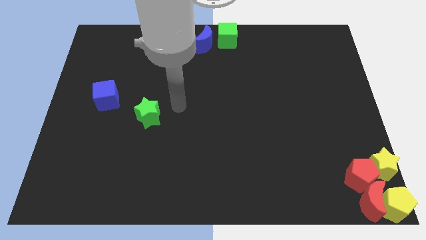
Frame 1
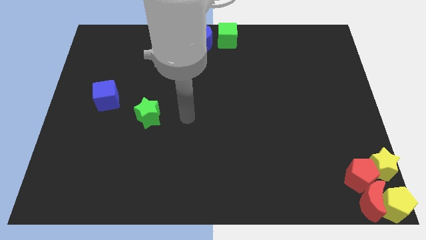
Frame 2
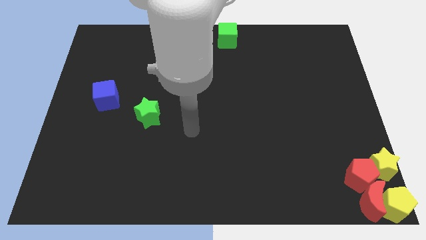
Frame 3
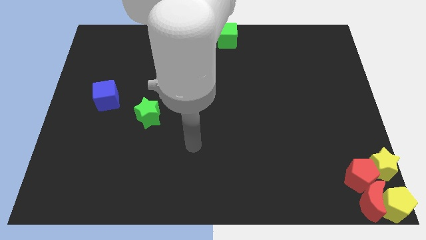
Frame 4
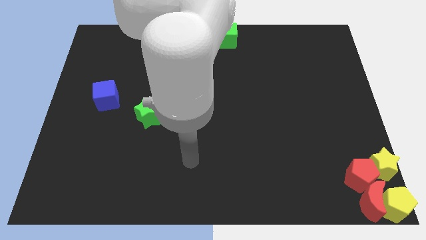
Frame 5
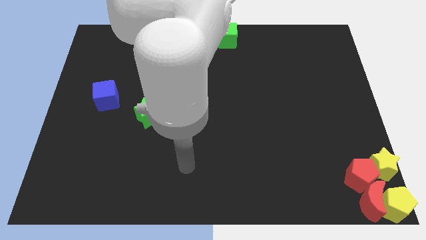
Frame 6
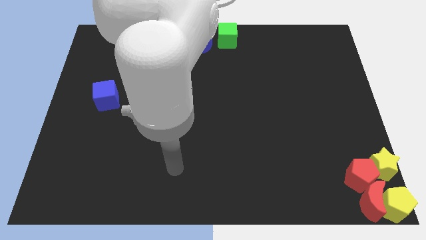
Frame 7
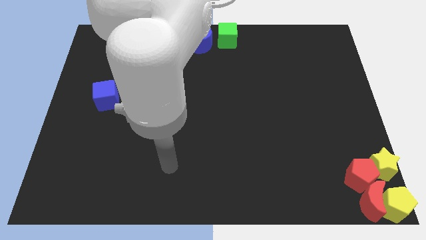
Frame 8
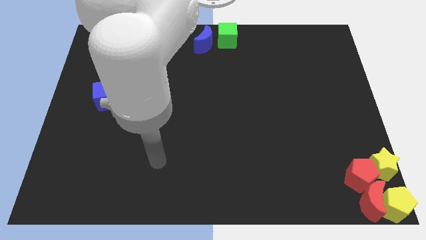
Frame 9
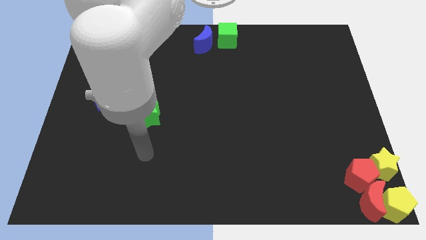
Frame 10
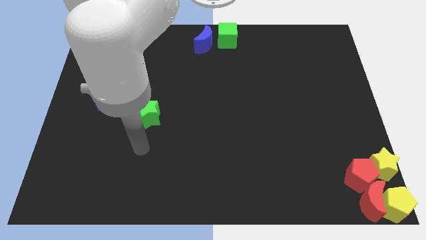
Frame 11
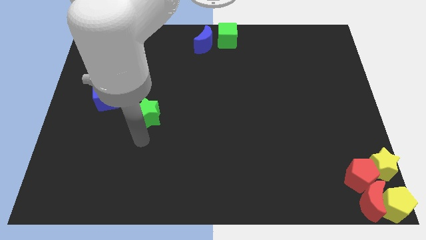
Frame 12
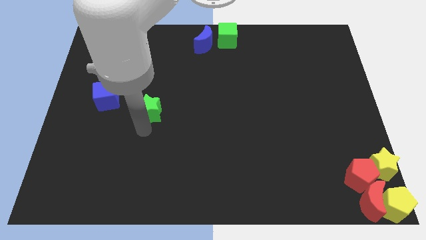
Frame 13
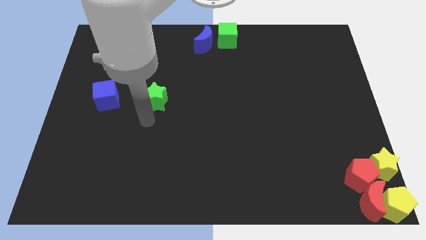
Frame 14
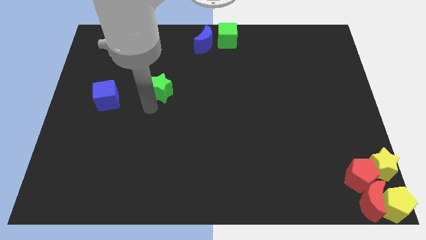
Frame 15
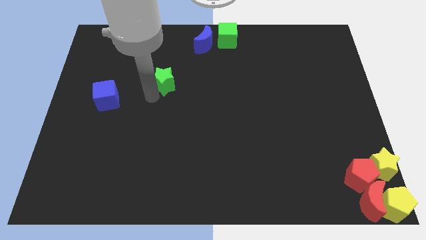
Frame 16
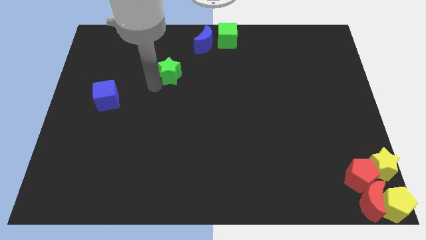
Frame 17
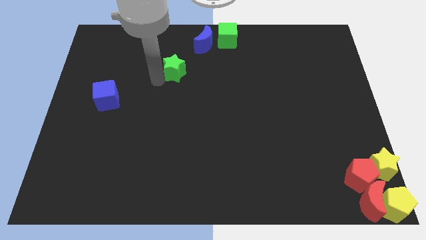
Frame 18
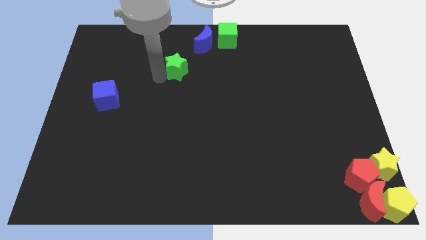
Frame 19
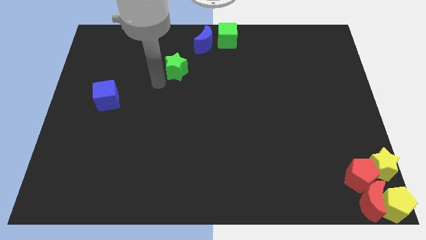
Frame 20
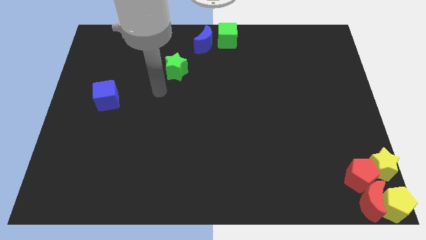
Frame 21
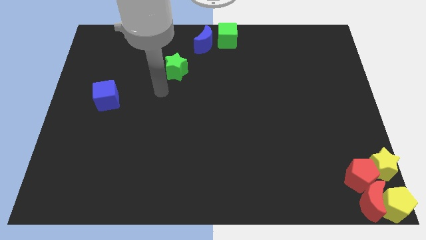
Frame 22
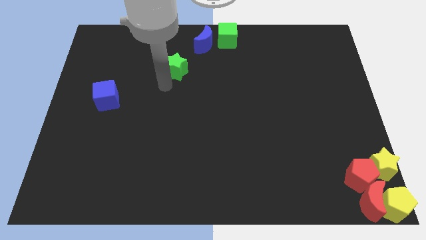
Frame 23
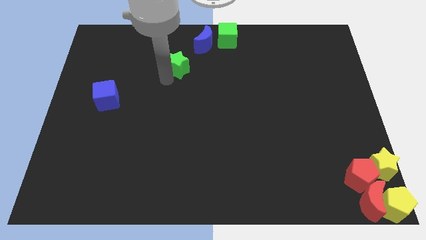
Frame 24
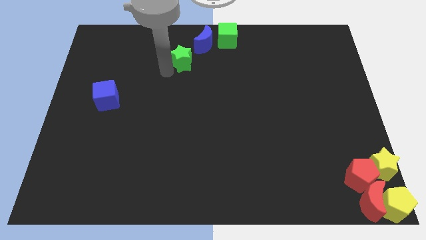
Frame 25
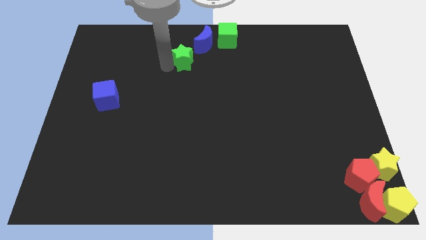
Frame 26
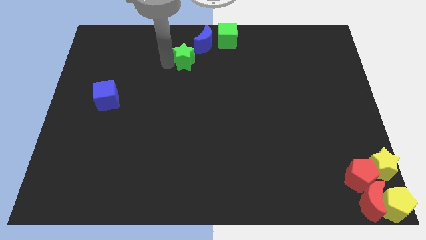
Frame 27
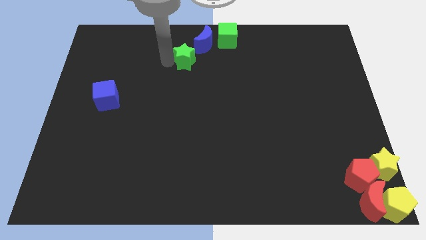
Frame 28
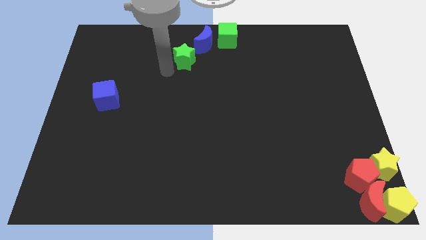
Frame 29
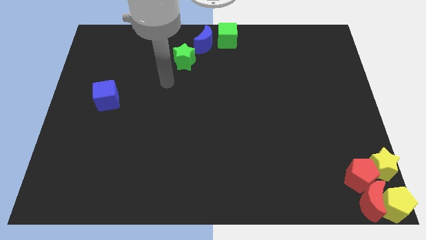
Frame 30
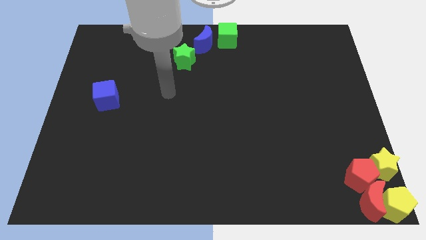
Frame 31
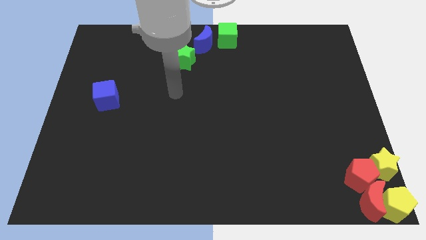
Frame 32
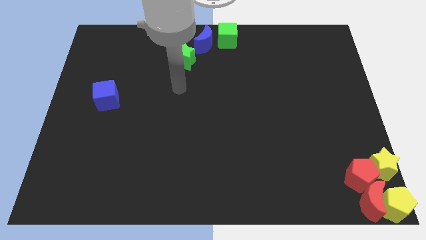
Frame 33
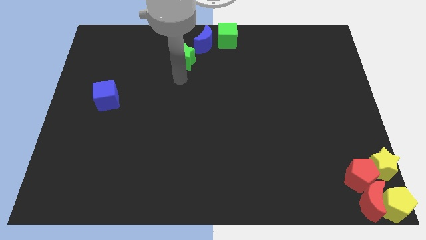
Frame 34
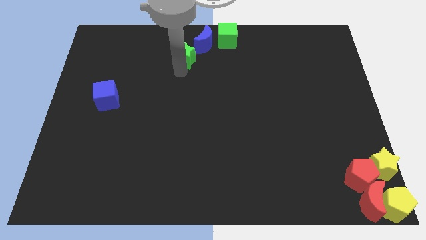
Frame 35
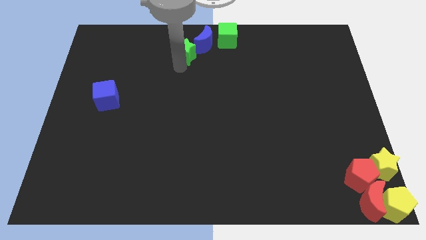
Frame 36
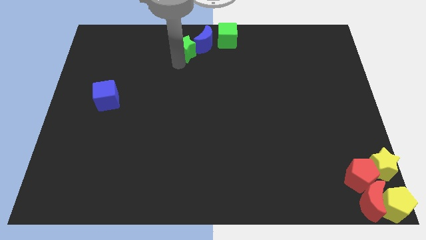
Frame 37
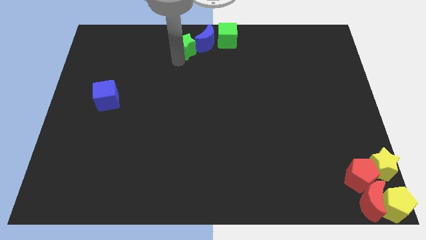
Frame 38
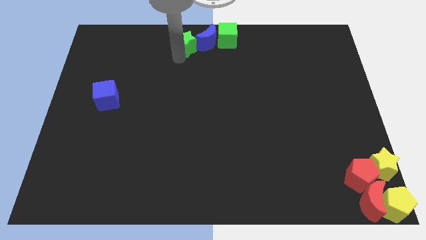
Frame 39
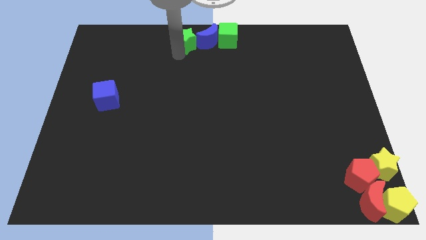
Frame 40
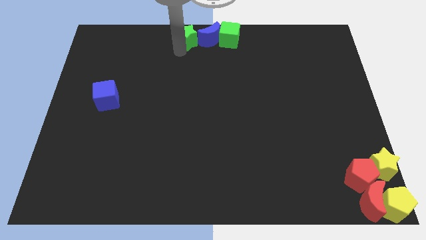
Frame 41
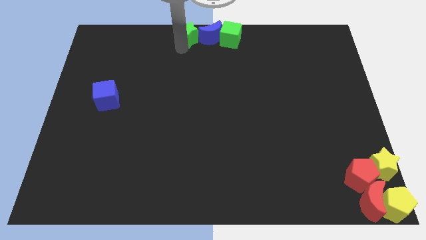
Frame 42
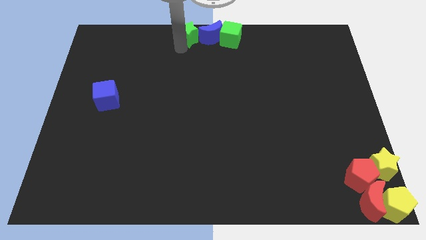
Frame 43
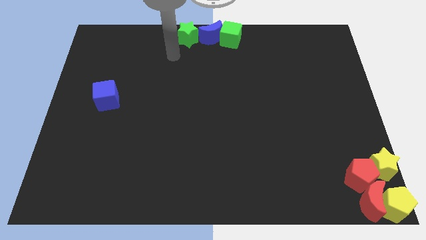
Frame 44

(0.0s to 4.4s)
push the green star to the left of the blue crescent

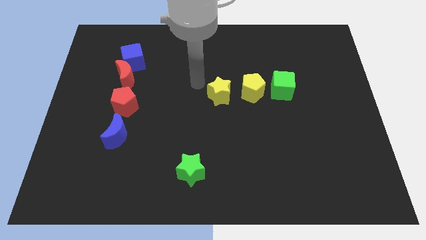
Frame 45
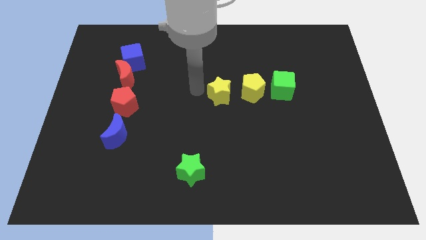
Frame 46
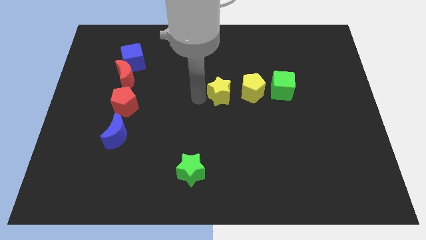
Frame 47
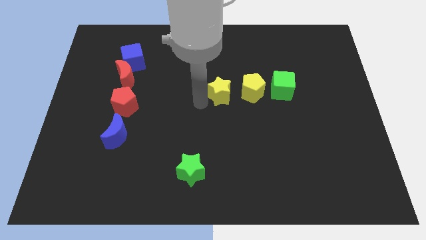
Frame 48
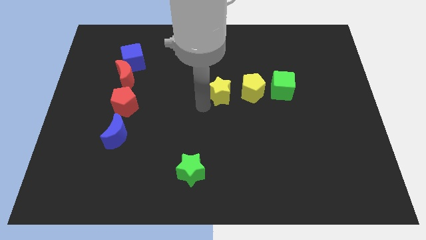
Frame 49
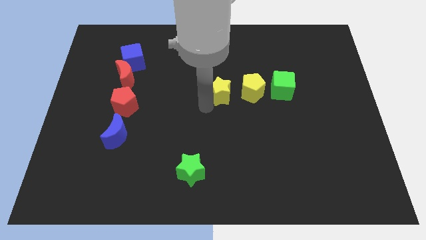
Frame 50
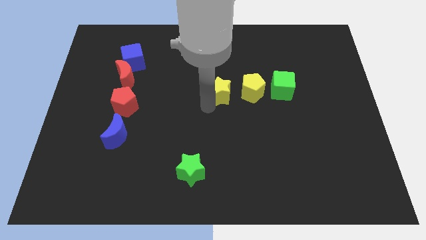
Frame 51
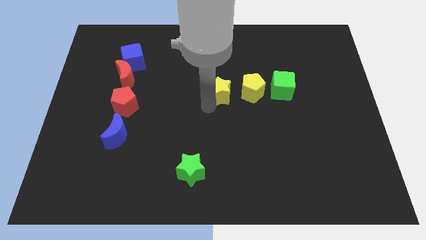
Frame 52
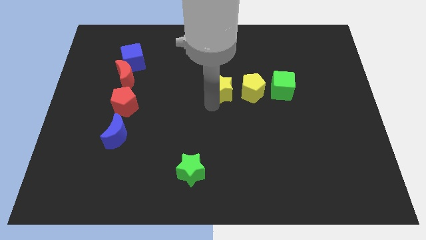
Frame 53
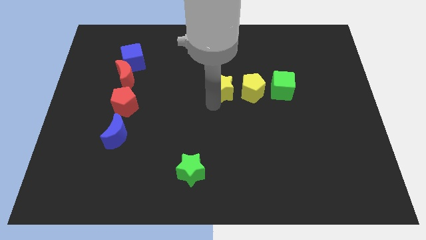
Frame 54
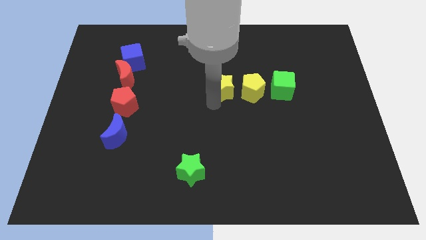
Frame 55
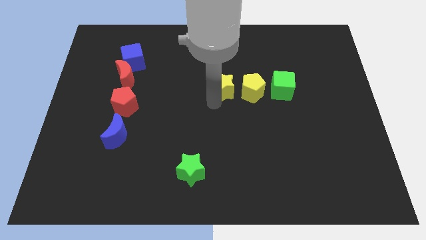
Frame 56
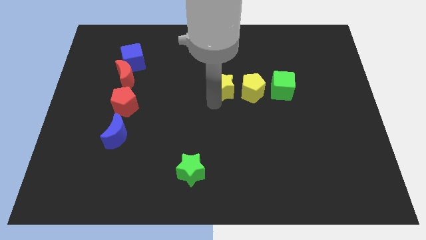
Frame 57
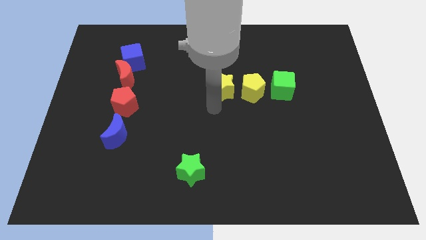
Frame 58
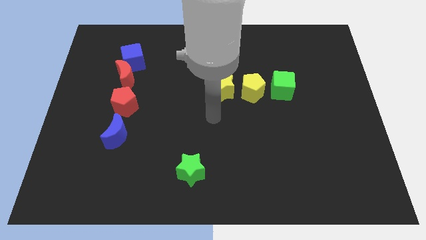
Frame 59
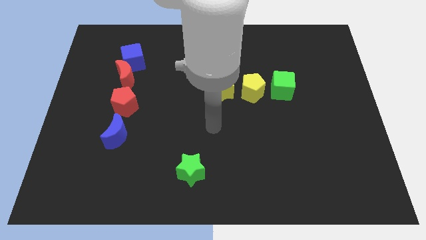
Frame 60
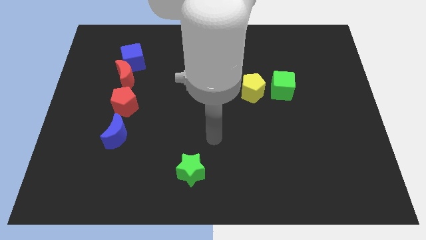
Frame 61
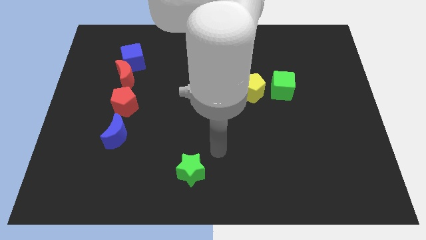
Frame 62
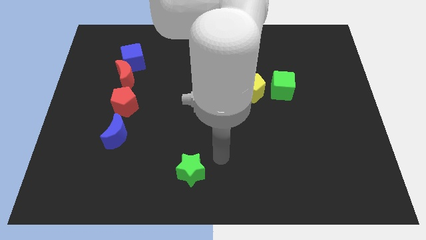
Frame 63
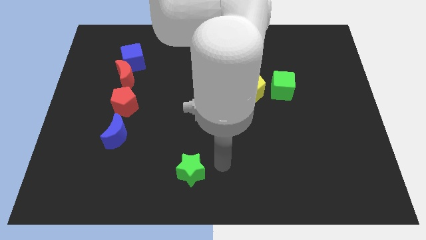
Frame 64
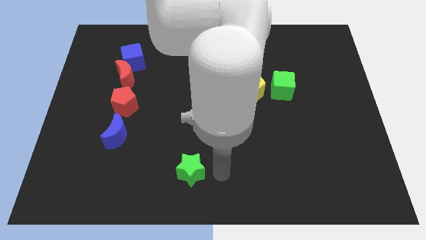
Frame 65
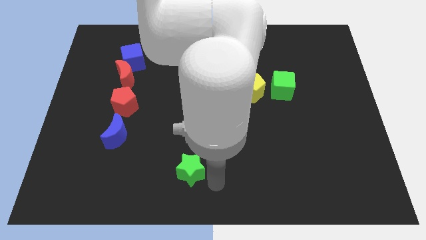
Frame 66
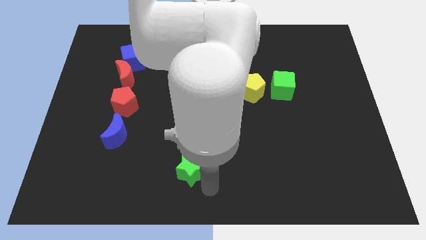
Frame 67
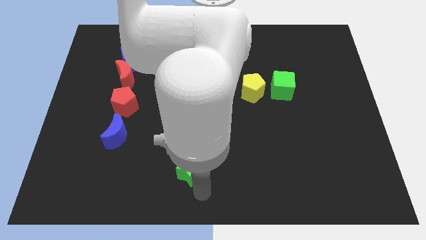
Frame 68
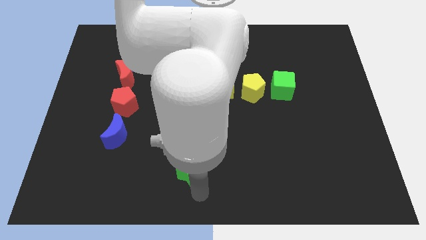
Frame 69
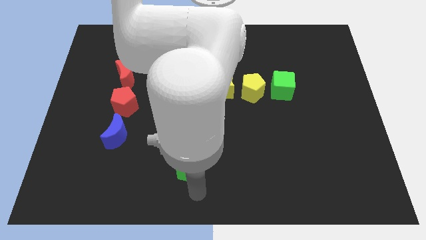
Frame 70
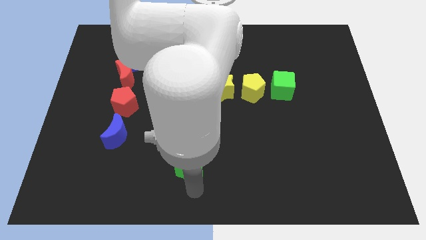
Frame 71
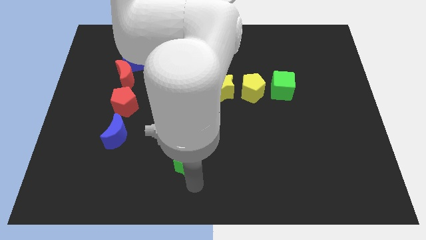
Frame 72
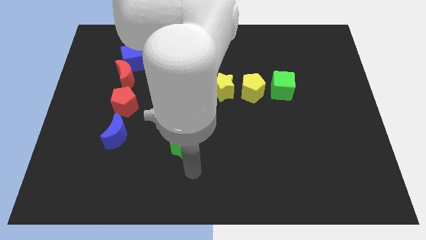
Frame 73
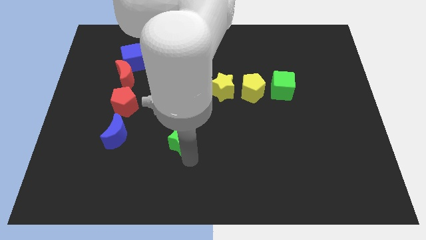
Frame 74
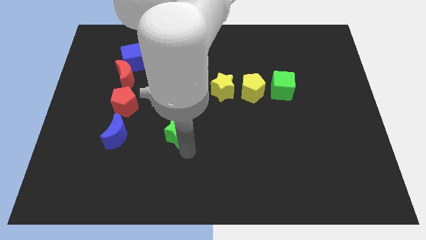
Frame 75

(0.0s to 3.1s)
push the green star to the right side of the blue moon

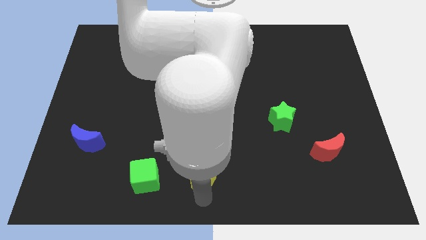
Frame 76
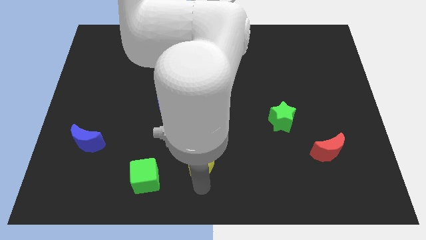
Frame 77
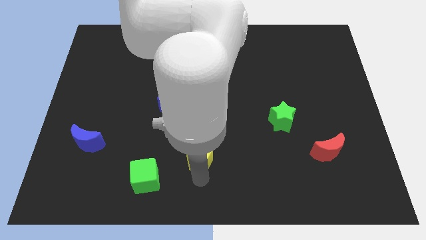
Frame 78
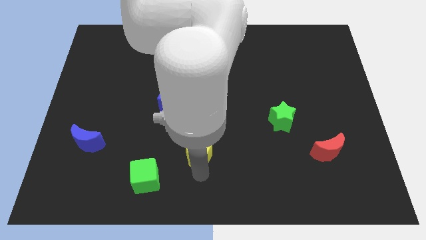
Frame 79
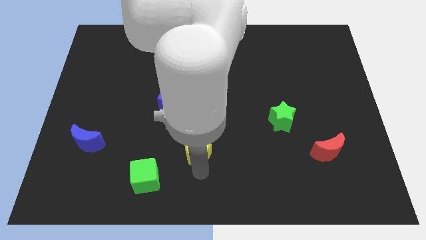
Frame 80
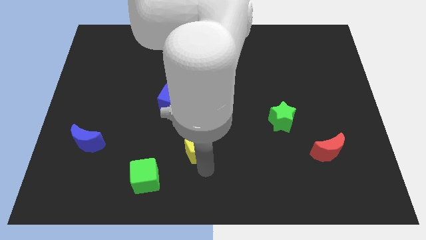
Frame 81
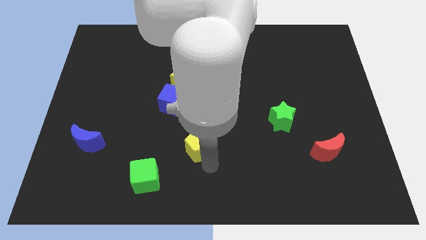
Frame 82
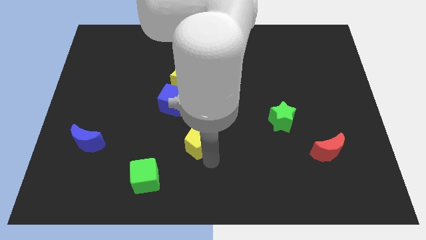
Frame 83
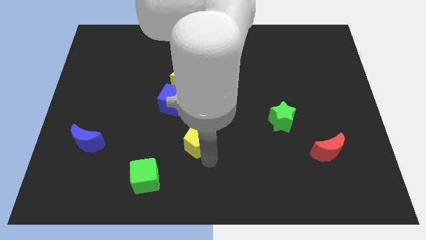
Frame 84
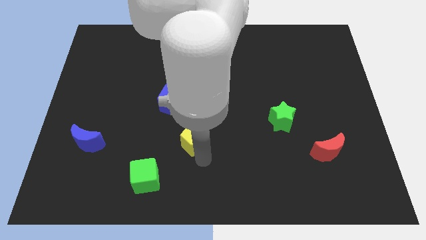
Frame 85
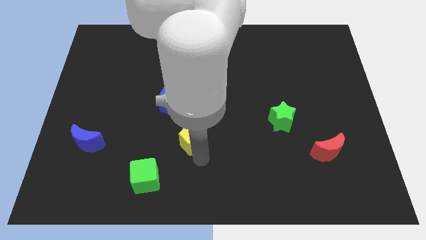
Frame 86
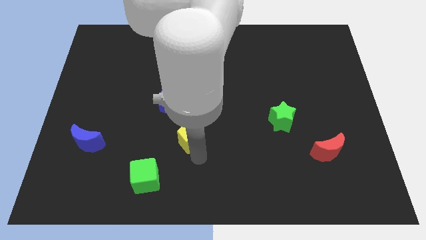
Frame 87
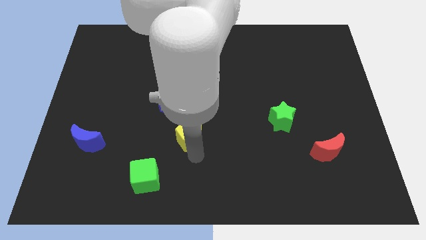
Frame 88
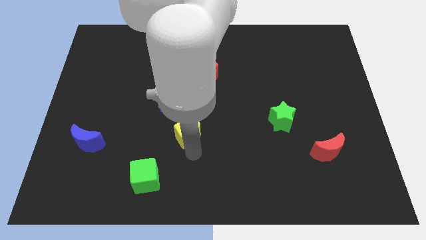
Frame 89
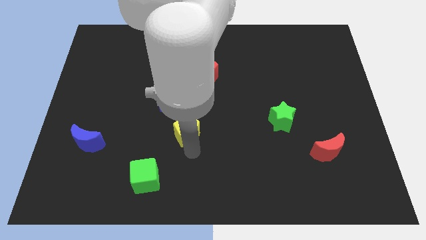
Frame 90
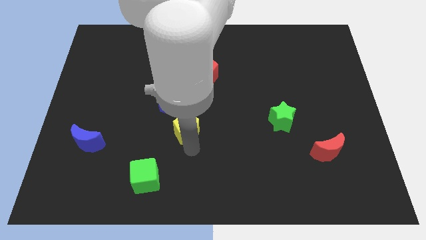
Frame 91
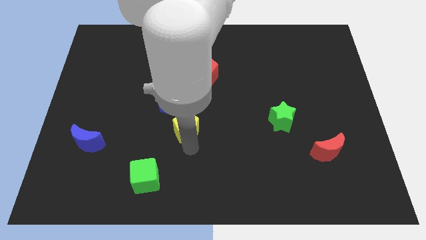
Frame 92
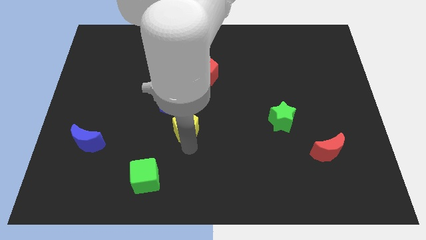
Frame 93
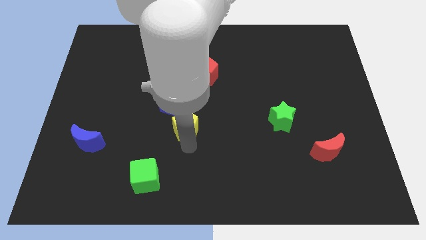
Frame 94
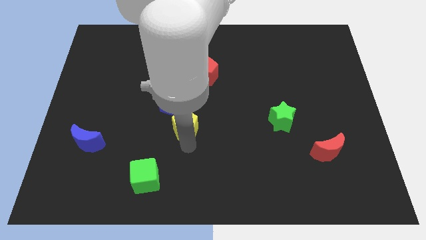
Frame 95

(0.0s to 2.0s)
push the yellow pentagon towards up
